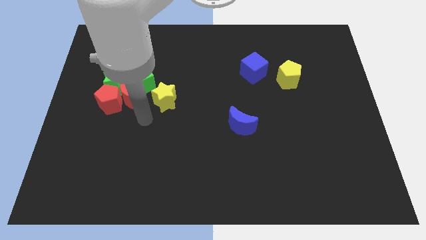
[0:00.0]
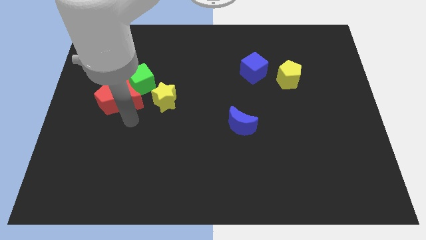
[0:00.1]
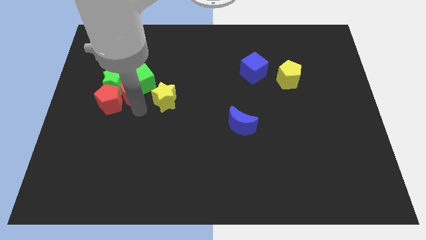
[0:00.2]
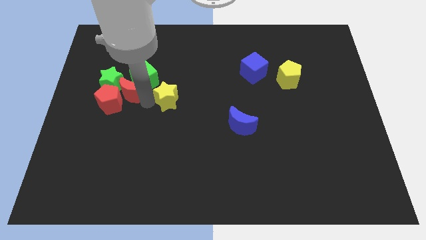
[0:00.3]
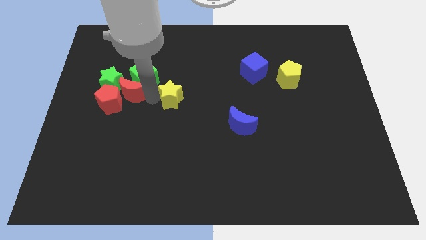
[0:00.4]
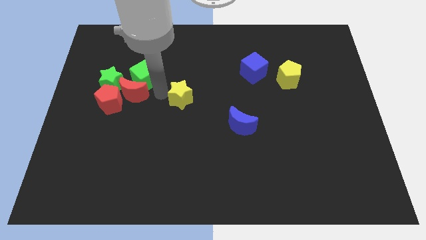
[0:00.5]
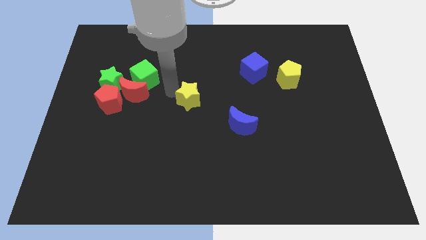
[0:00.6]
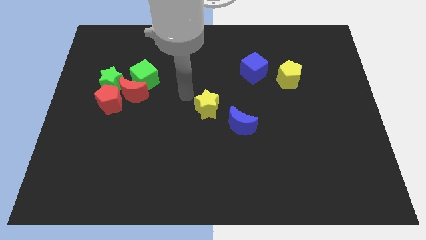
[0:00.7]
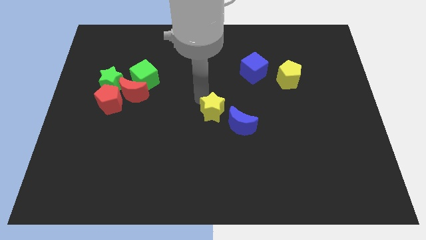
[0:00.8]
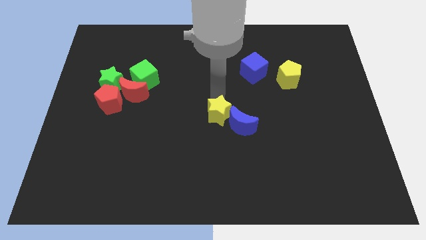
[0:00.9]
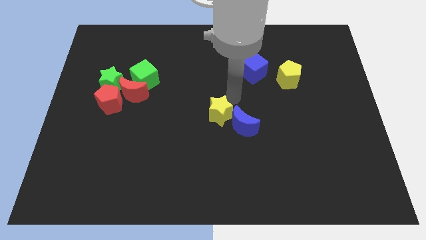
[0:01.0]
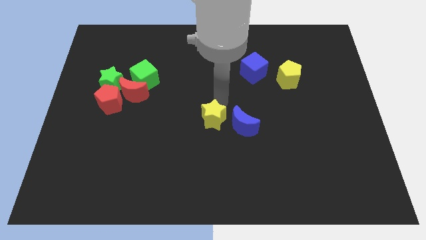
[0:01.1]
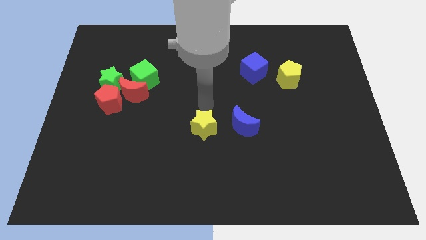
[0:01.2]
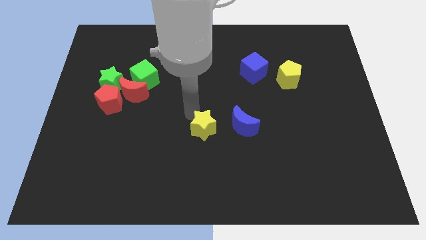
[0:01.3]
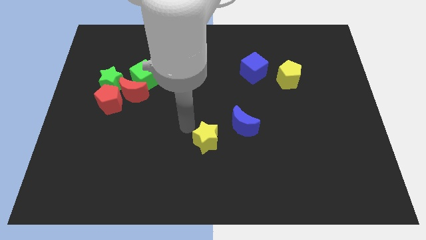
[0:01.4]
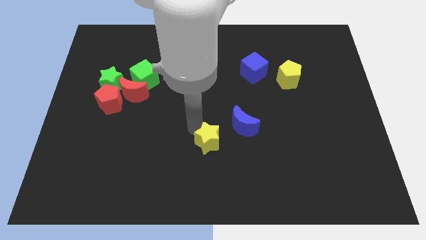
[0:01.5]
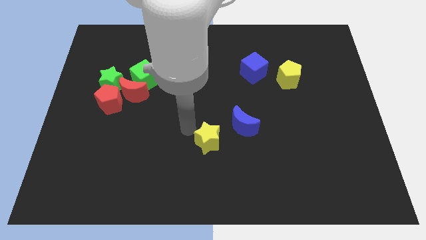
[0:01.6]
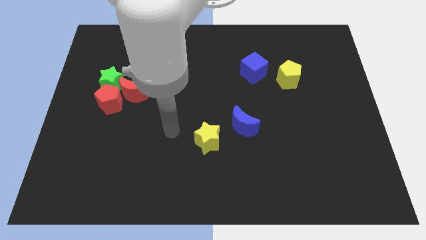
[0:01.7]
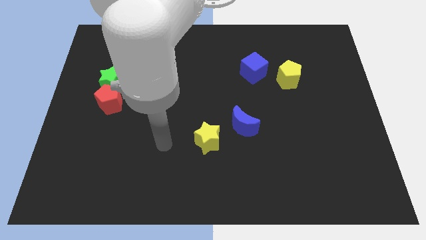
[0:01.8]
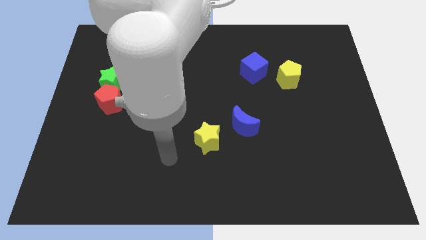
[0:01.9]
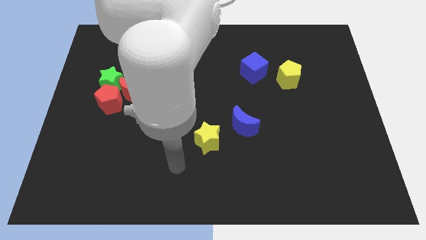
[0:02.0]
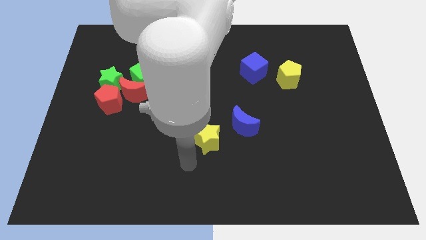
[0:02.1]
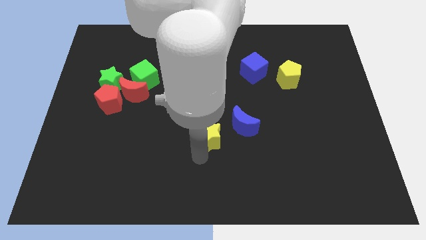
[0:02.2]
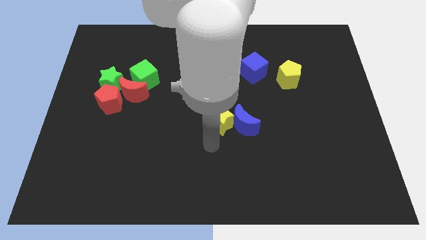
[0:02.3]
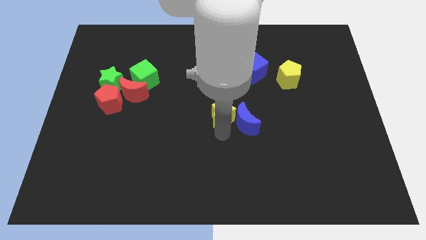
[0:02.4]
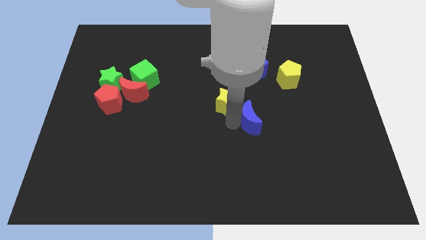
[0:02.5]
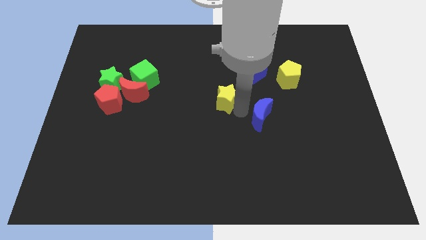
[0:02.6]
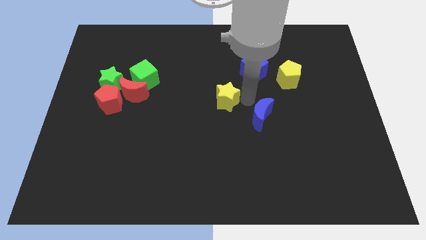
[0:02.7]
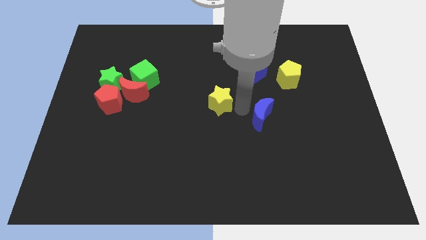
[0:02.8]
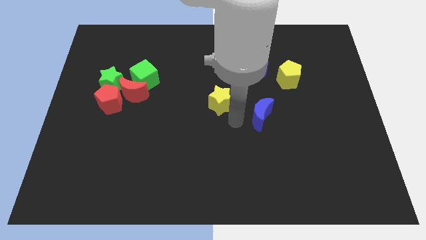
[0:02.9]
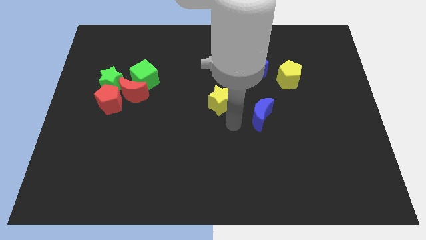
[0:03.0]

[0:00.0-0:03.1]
push the yellow star to the center of the board

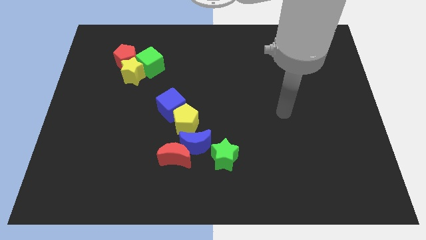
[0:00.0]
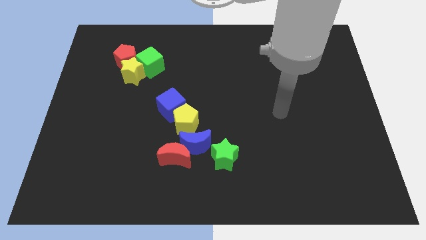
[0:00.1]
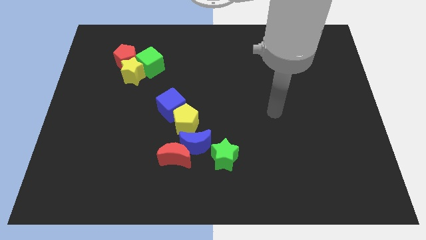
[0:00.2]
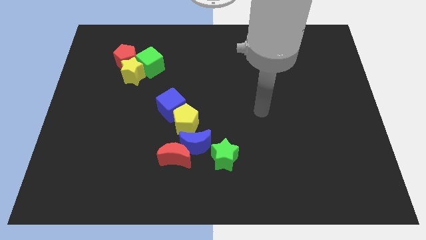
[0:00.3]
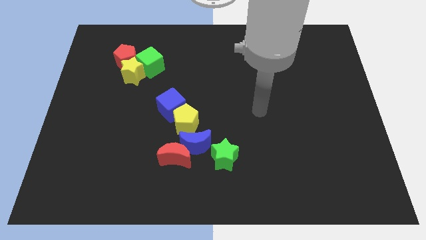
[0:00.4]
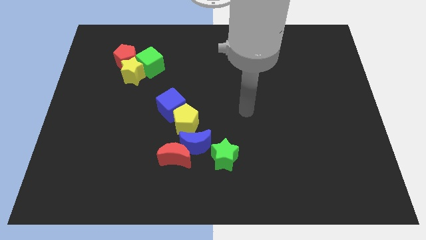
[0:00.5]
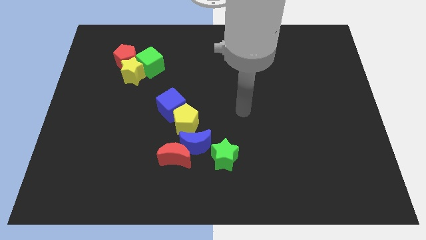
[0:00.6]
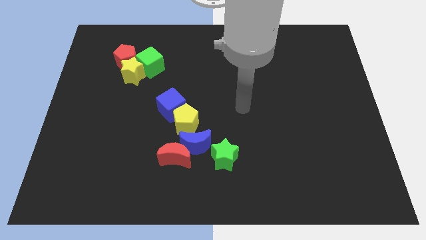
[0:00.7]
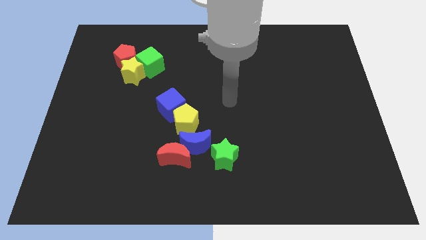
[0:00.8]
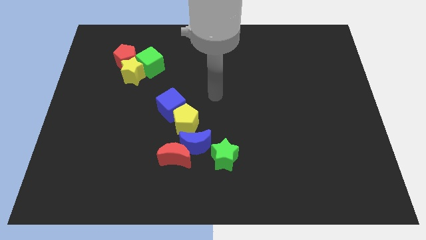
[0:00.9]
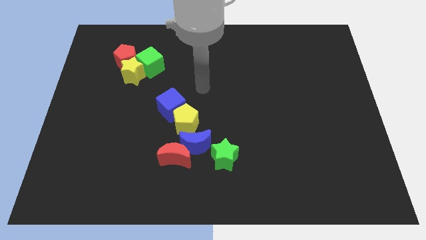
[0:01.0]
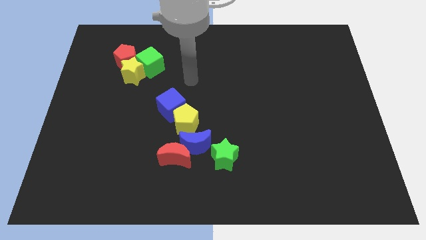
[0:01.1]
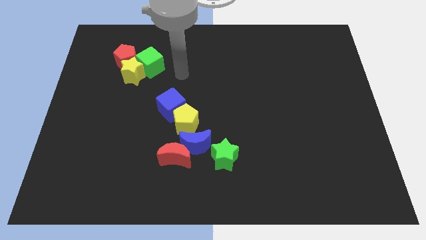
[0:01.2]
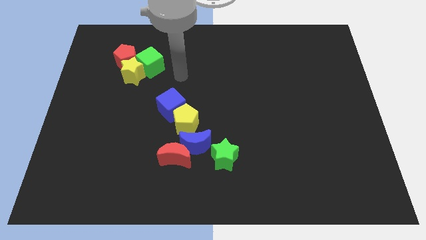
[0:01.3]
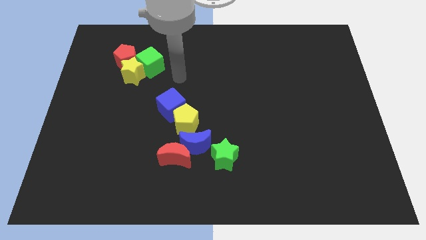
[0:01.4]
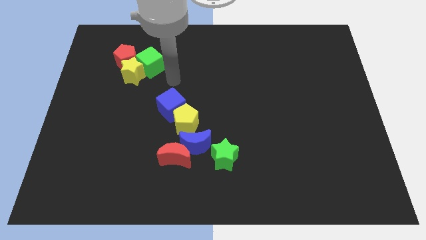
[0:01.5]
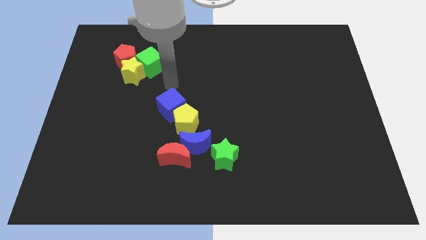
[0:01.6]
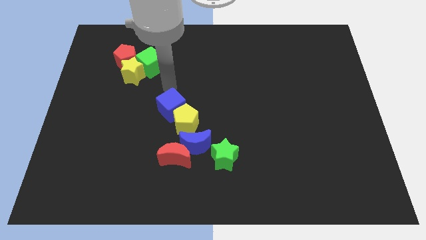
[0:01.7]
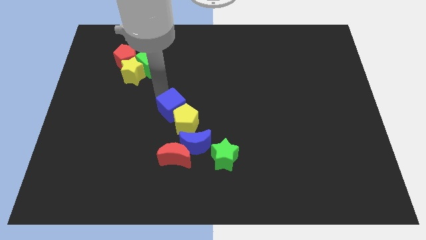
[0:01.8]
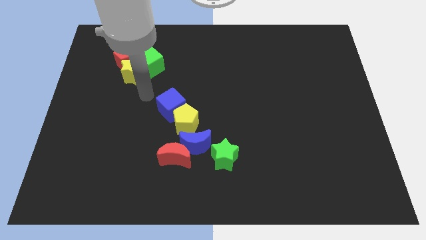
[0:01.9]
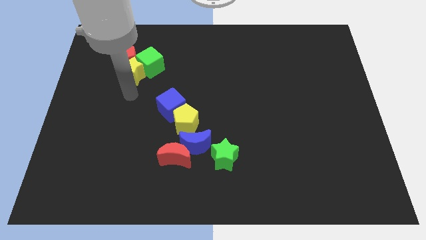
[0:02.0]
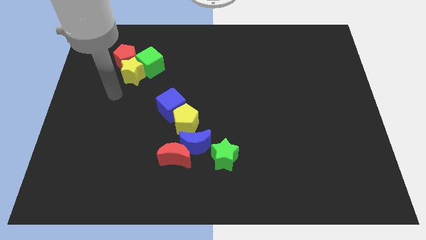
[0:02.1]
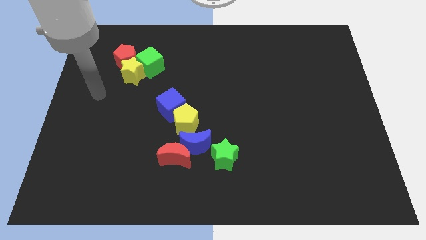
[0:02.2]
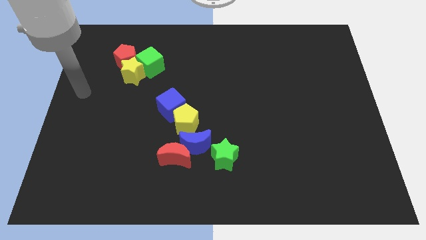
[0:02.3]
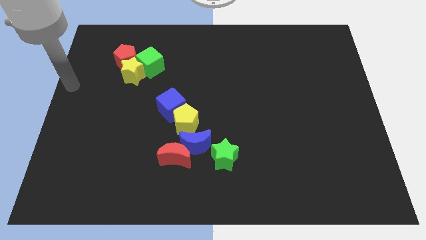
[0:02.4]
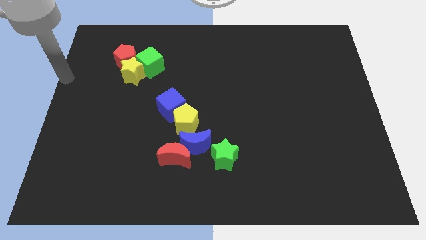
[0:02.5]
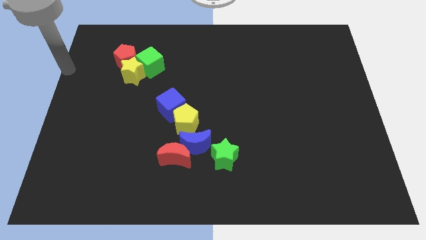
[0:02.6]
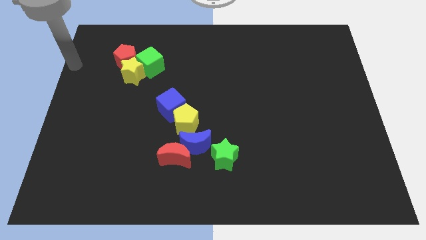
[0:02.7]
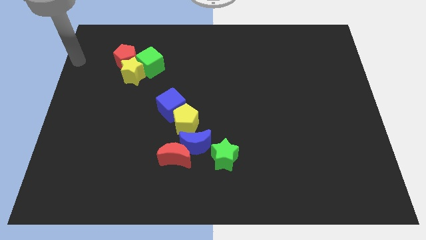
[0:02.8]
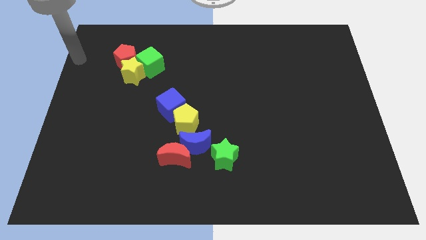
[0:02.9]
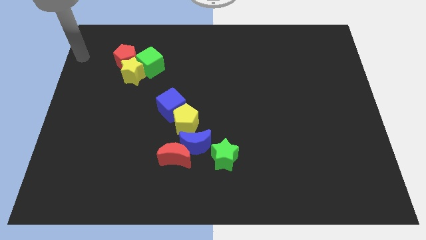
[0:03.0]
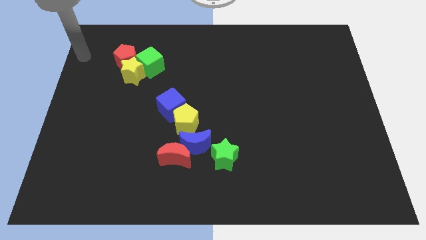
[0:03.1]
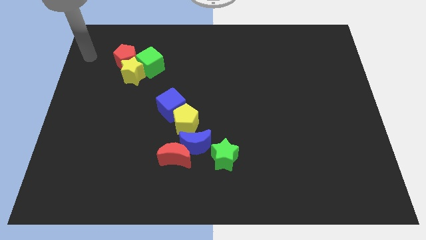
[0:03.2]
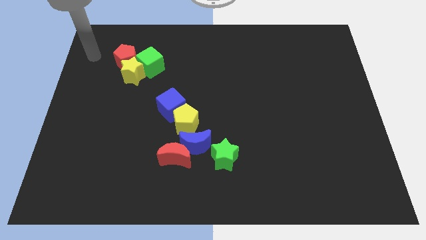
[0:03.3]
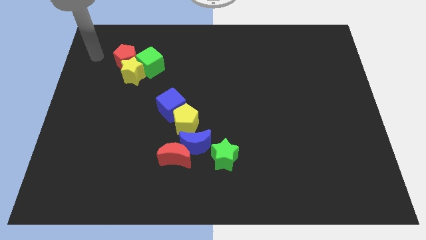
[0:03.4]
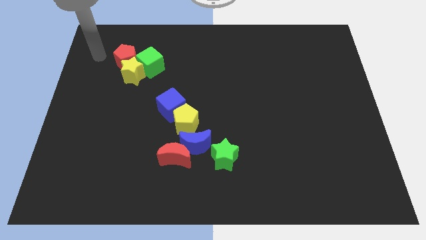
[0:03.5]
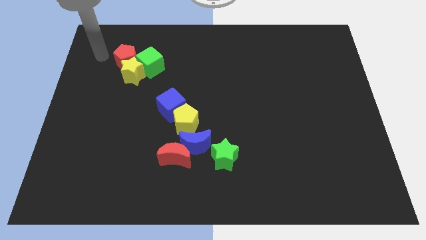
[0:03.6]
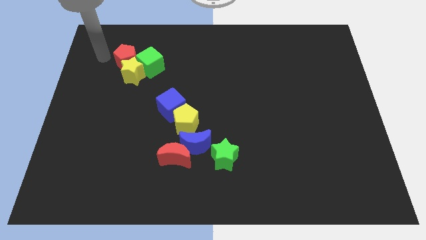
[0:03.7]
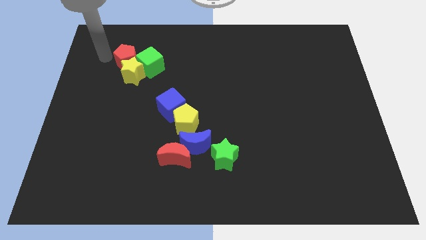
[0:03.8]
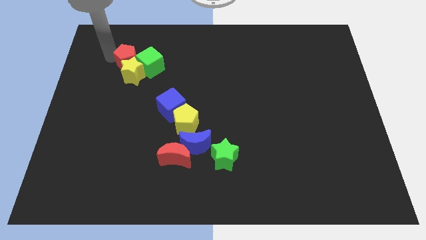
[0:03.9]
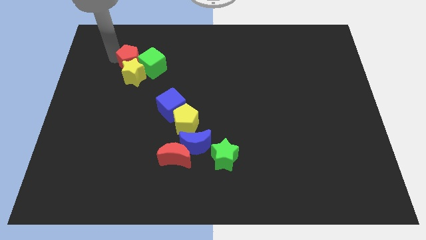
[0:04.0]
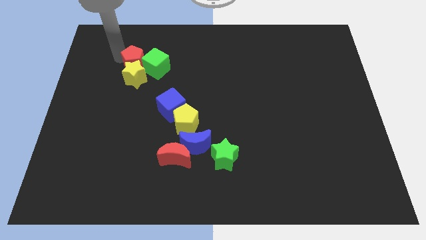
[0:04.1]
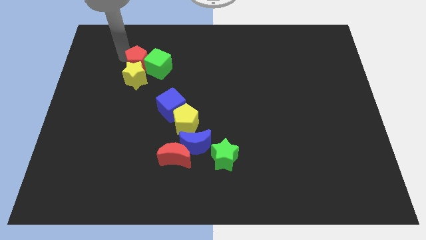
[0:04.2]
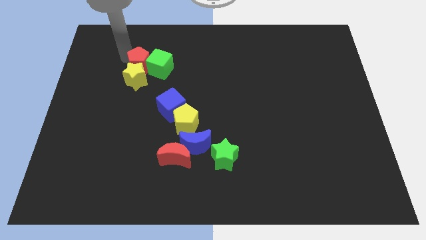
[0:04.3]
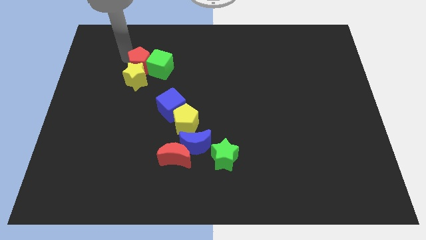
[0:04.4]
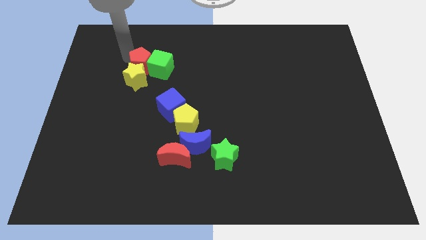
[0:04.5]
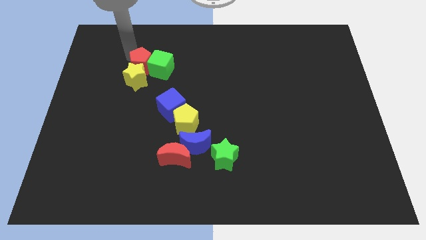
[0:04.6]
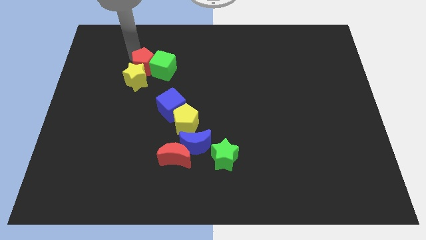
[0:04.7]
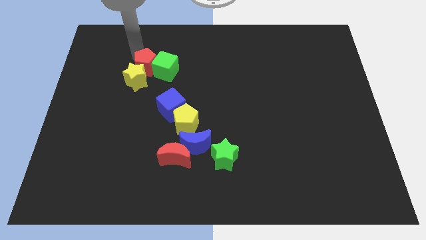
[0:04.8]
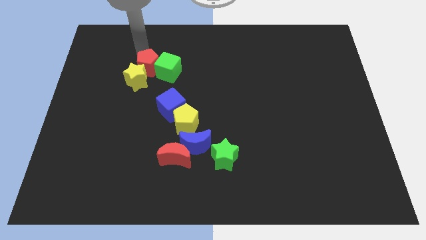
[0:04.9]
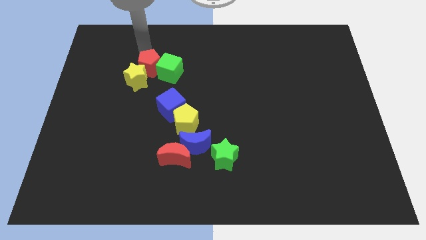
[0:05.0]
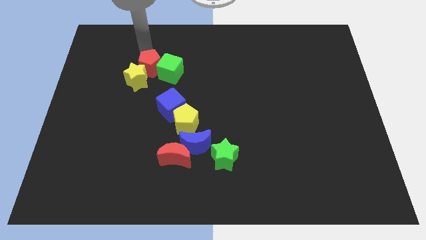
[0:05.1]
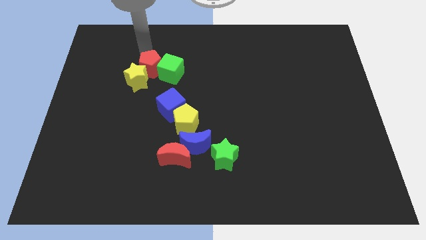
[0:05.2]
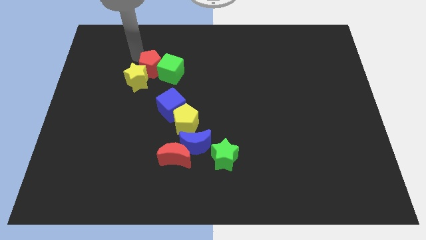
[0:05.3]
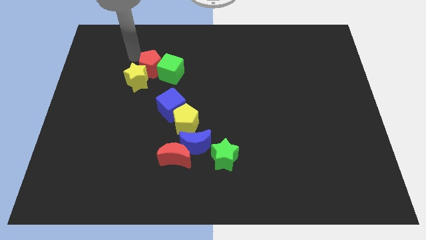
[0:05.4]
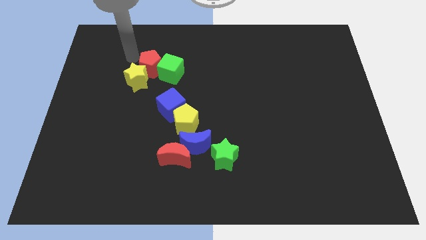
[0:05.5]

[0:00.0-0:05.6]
push the red pentagon into the green cube

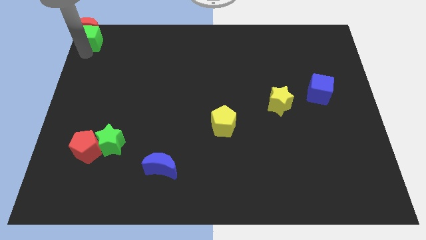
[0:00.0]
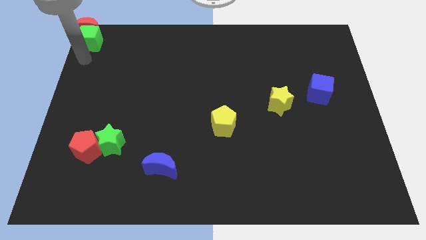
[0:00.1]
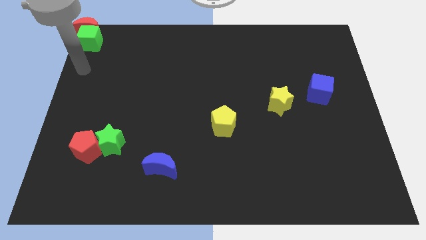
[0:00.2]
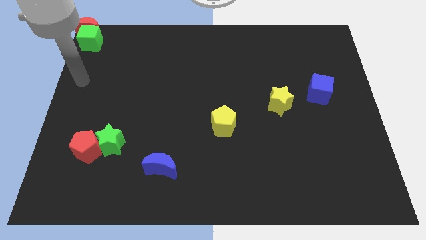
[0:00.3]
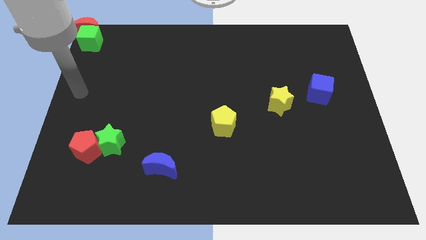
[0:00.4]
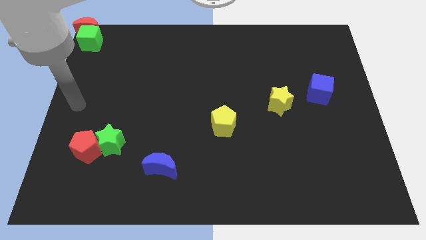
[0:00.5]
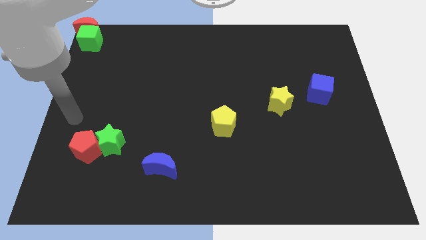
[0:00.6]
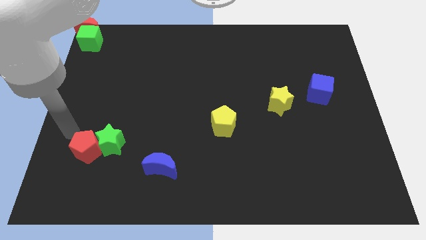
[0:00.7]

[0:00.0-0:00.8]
move your arm away from the green cube
